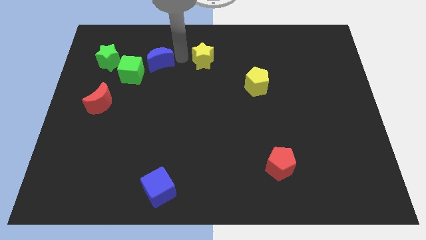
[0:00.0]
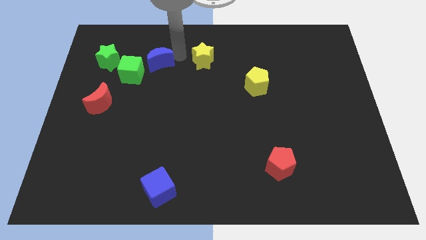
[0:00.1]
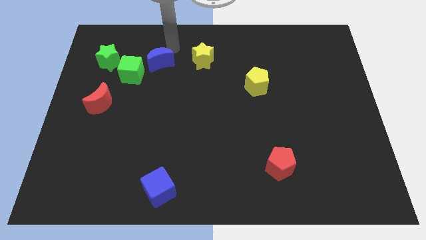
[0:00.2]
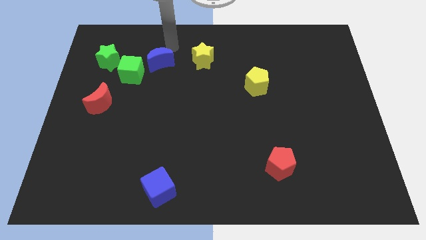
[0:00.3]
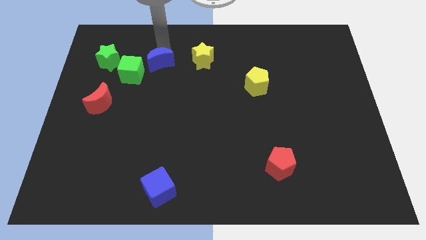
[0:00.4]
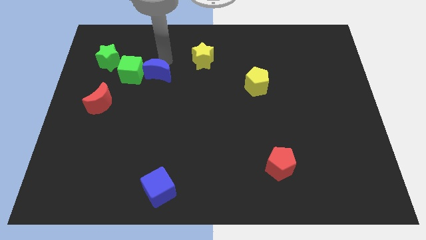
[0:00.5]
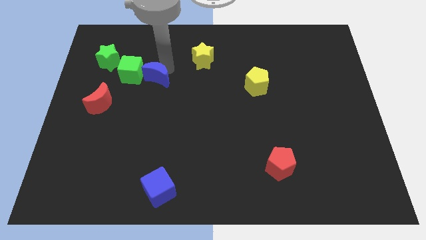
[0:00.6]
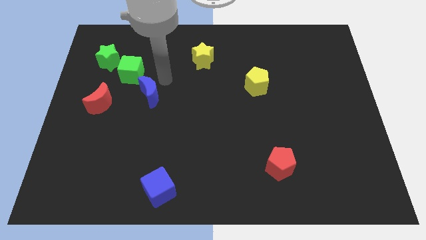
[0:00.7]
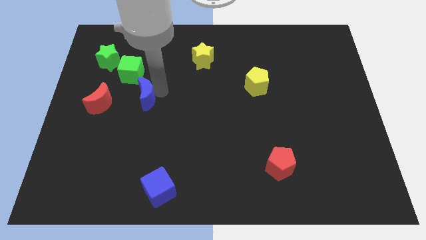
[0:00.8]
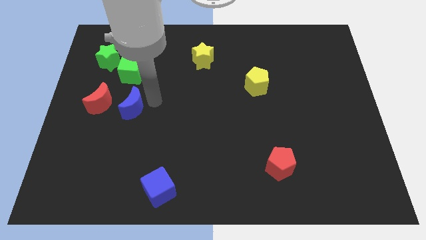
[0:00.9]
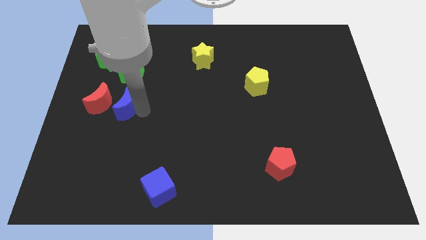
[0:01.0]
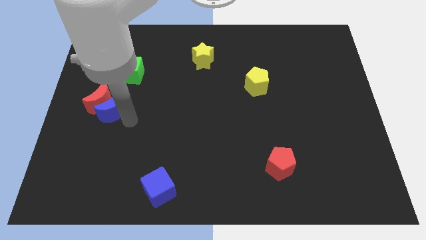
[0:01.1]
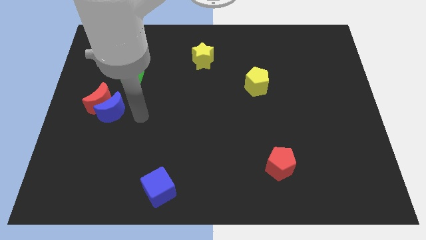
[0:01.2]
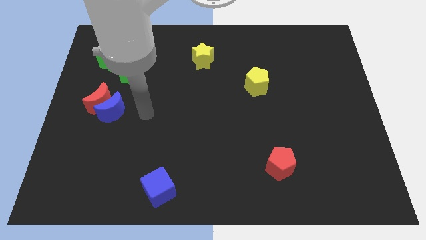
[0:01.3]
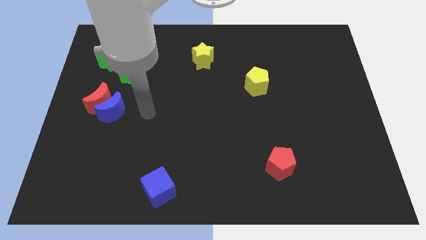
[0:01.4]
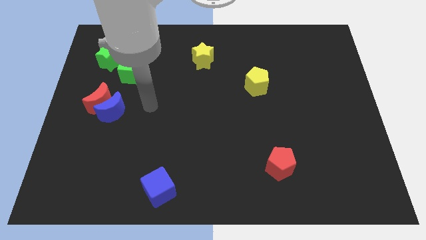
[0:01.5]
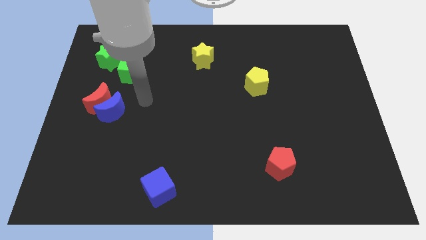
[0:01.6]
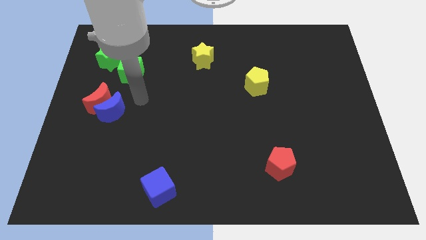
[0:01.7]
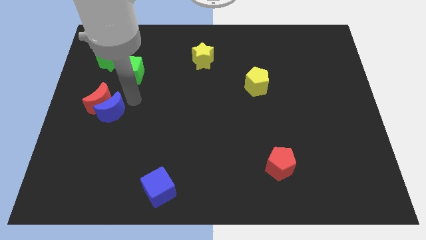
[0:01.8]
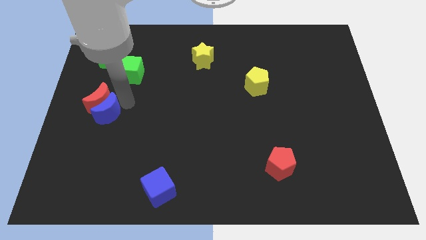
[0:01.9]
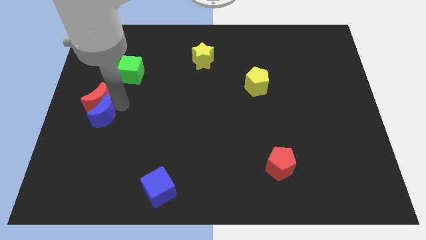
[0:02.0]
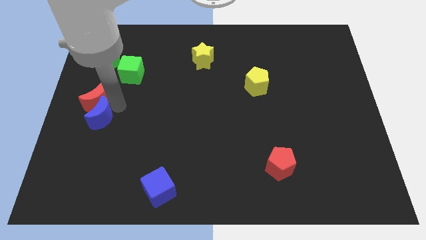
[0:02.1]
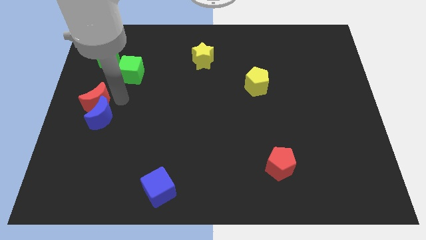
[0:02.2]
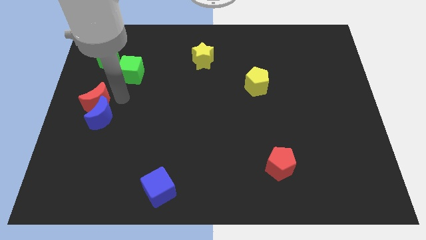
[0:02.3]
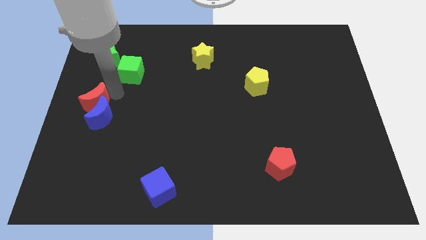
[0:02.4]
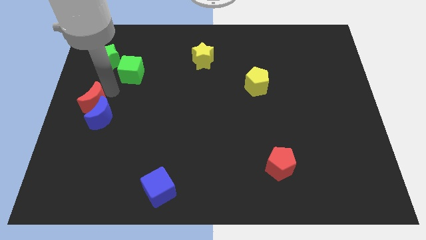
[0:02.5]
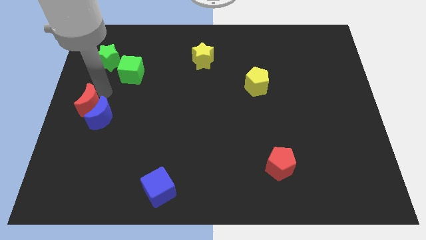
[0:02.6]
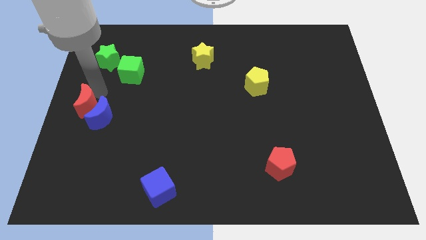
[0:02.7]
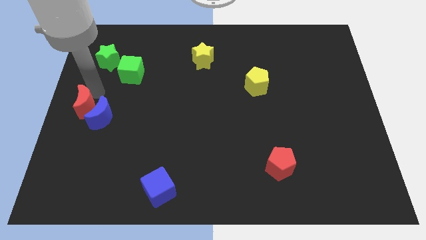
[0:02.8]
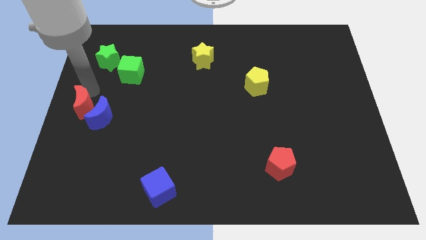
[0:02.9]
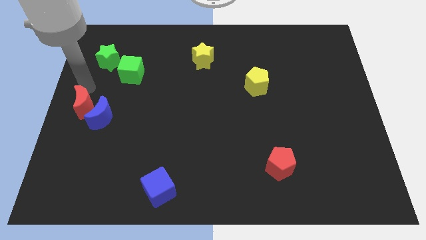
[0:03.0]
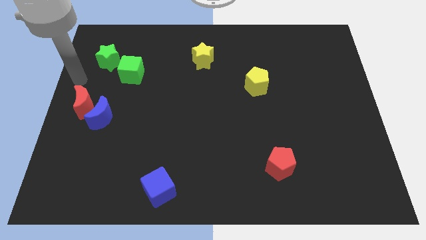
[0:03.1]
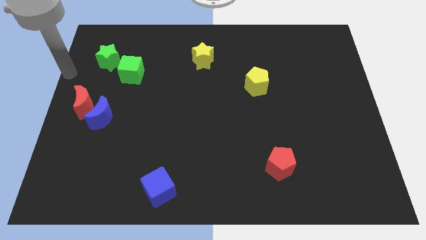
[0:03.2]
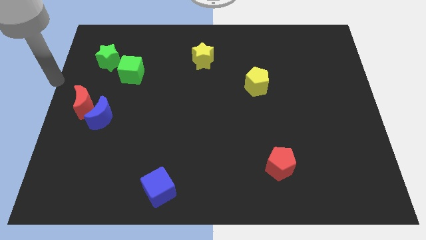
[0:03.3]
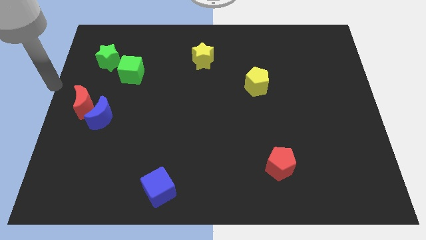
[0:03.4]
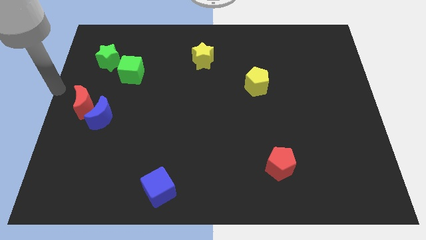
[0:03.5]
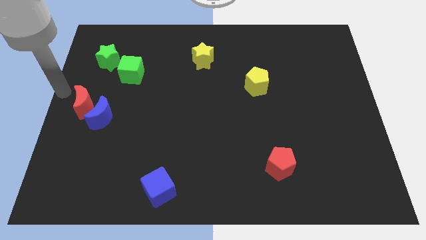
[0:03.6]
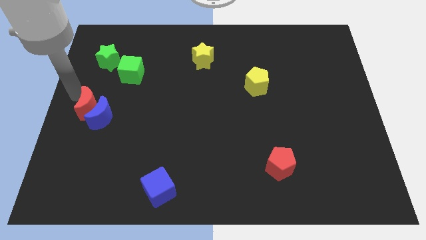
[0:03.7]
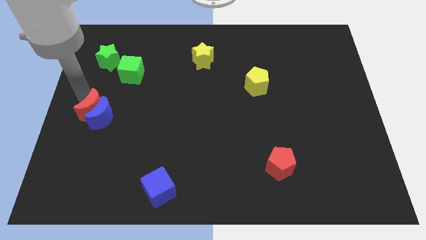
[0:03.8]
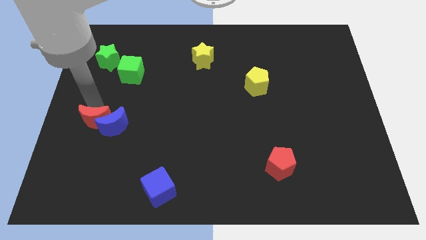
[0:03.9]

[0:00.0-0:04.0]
move the red moon and blue crescent close to each other

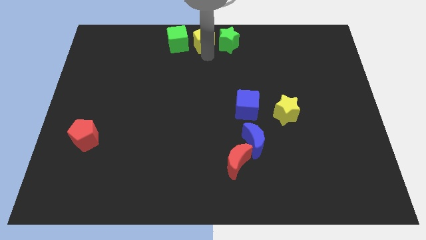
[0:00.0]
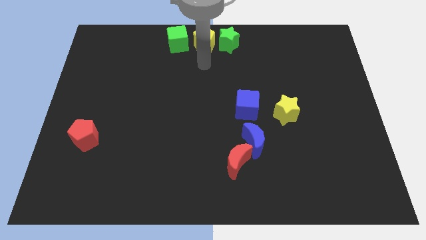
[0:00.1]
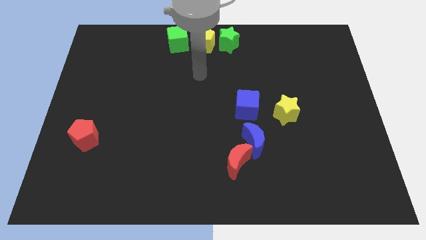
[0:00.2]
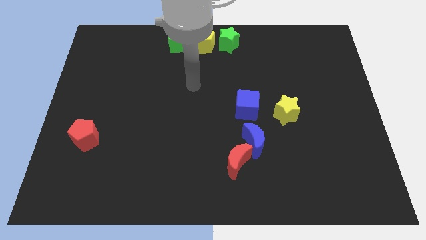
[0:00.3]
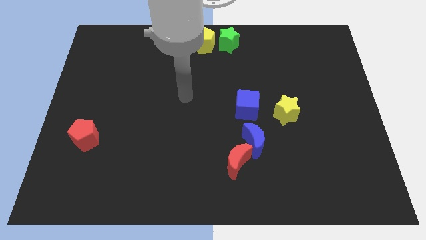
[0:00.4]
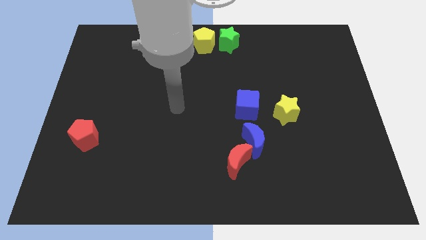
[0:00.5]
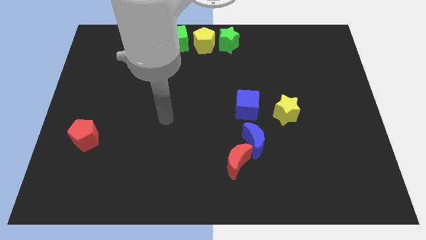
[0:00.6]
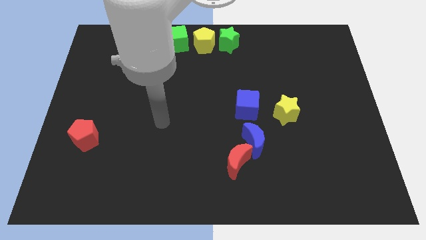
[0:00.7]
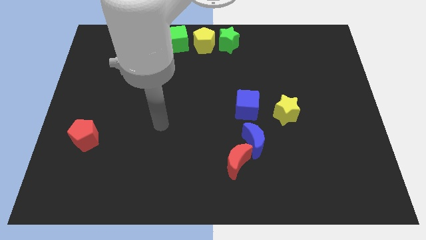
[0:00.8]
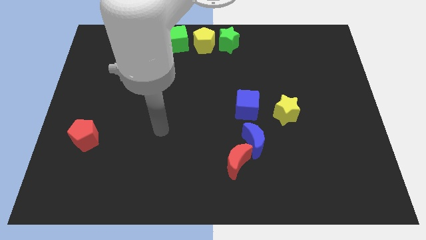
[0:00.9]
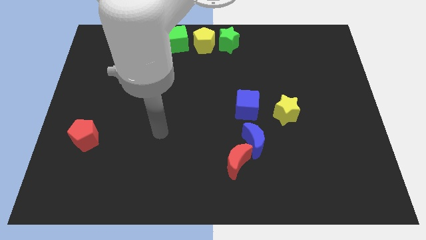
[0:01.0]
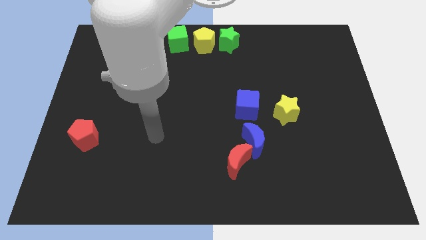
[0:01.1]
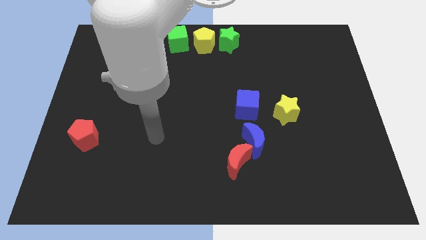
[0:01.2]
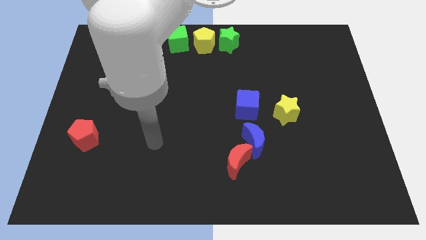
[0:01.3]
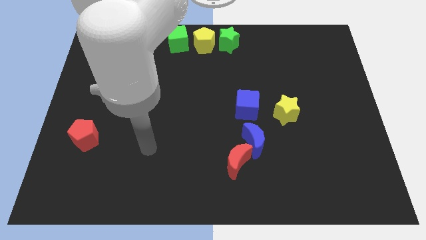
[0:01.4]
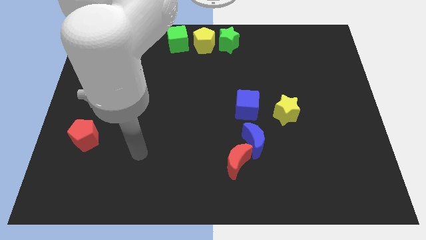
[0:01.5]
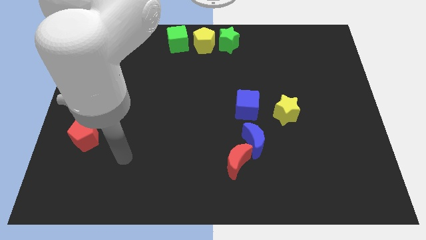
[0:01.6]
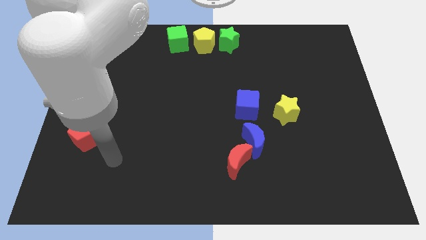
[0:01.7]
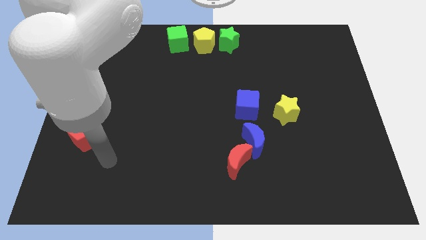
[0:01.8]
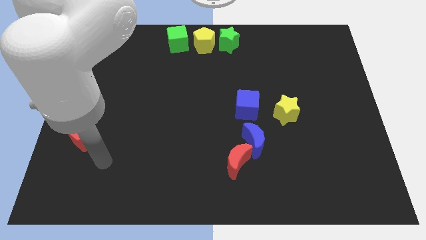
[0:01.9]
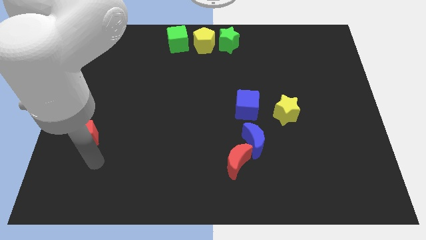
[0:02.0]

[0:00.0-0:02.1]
move your arm away from yellow pentagon

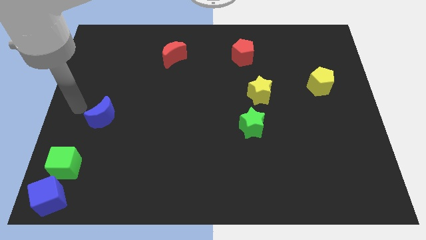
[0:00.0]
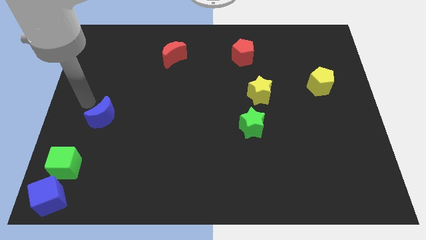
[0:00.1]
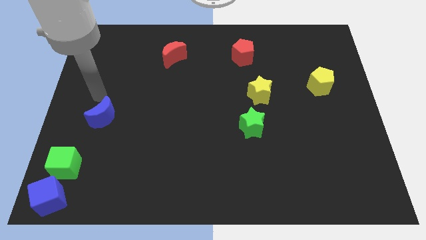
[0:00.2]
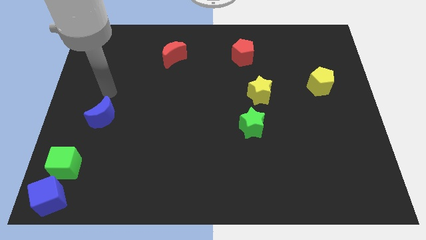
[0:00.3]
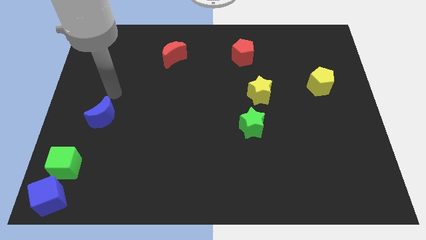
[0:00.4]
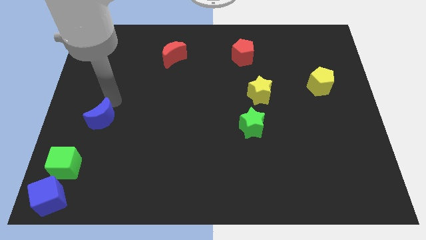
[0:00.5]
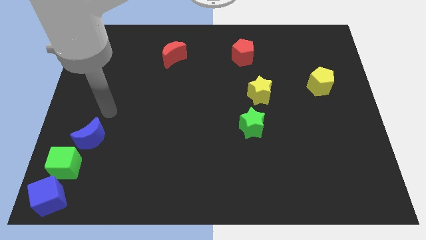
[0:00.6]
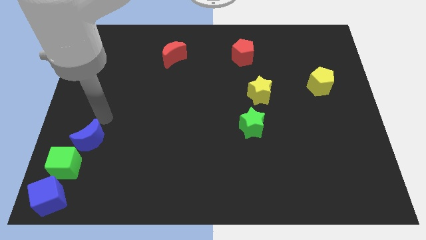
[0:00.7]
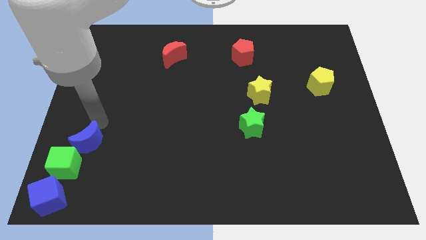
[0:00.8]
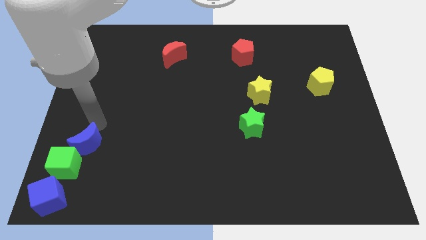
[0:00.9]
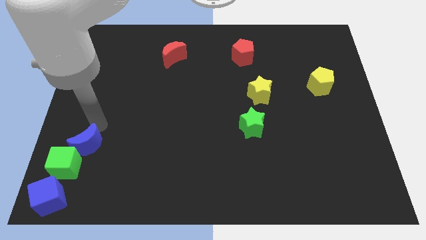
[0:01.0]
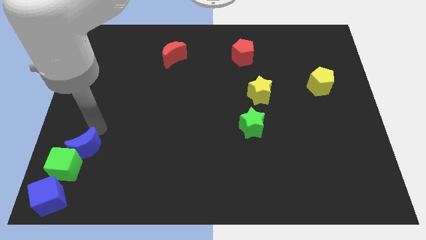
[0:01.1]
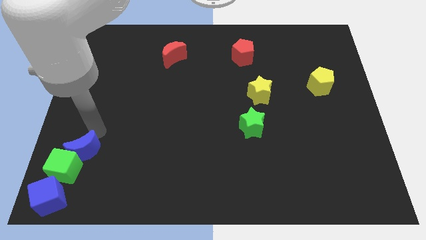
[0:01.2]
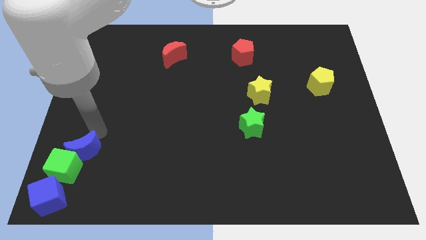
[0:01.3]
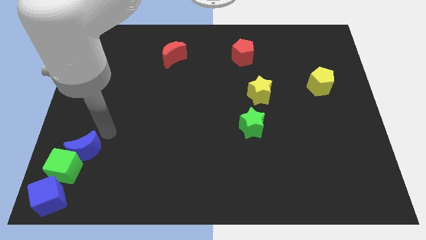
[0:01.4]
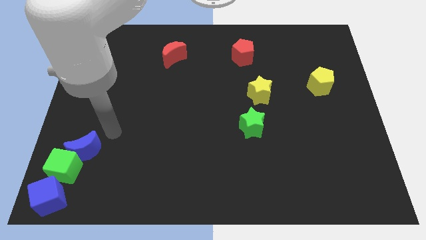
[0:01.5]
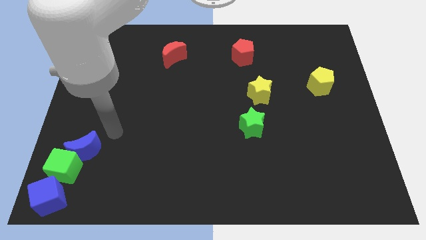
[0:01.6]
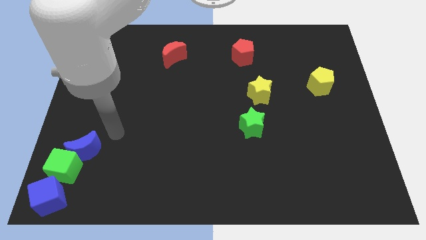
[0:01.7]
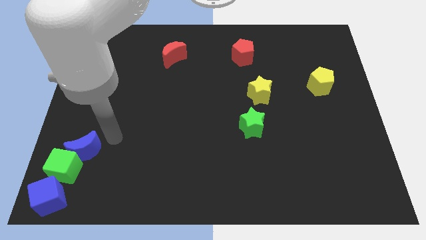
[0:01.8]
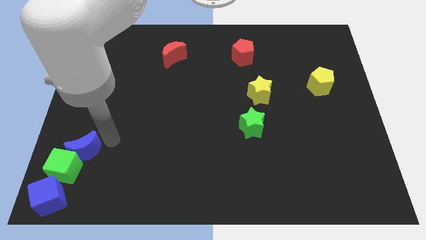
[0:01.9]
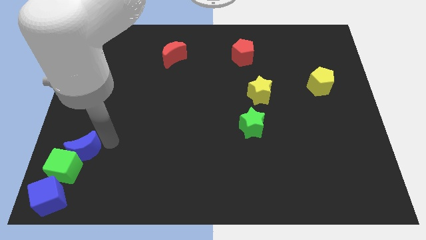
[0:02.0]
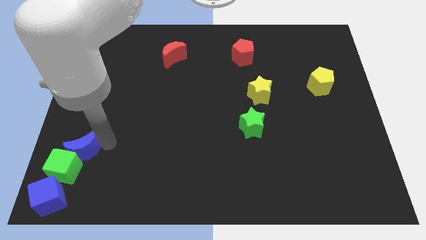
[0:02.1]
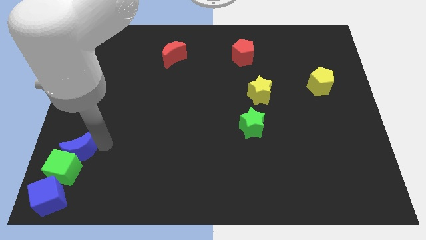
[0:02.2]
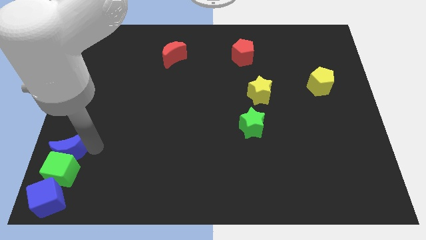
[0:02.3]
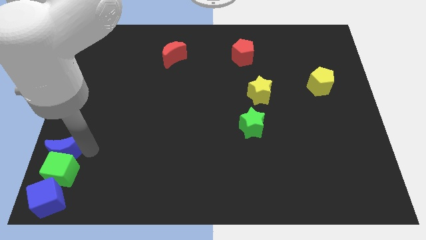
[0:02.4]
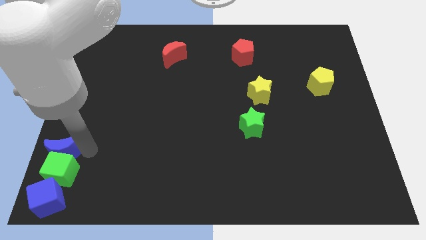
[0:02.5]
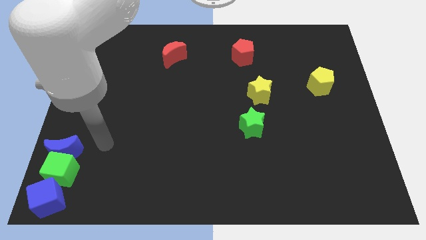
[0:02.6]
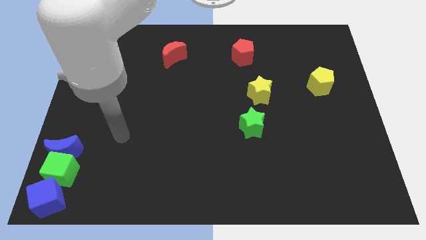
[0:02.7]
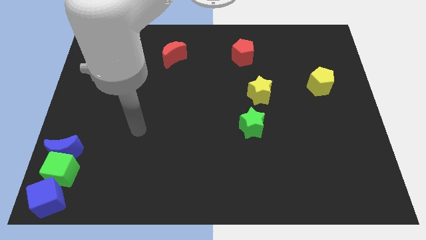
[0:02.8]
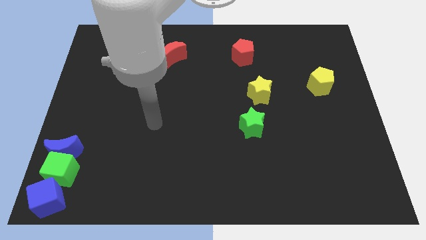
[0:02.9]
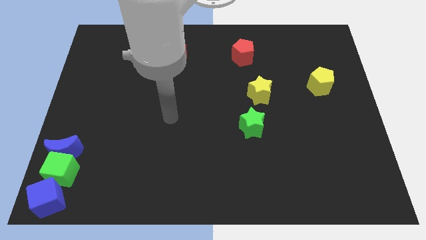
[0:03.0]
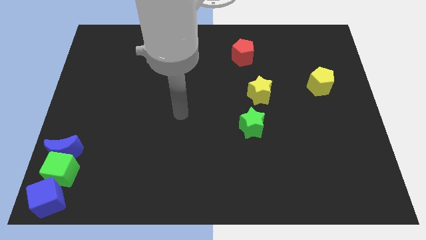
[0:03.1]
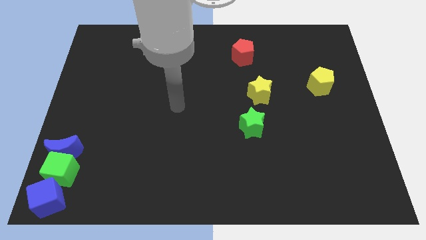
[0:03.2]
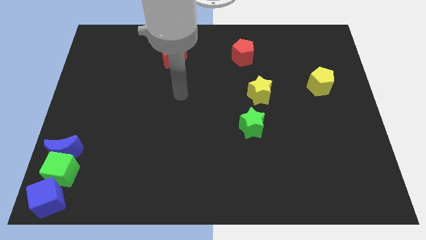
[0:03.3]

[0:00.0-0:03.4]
slide blue moon to the top of the green cube
